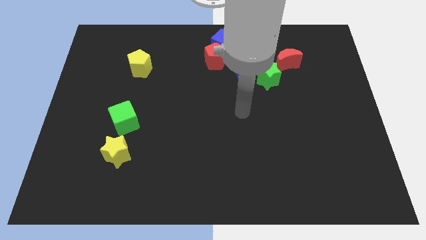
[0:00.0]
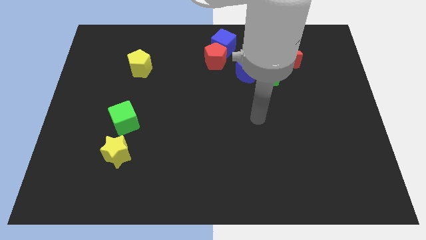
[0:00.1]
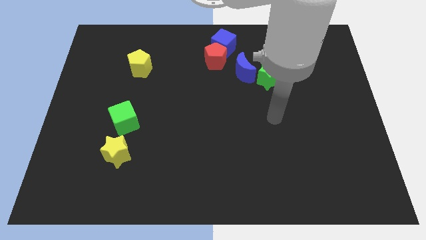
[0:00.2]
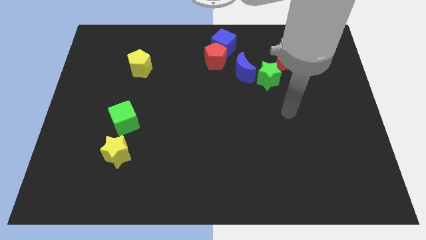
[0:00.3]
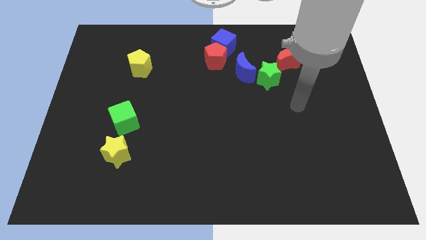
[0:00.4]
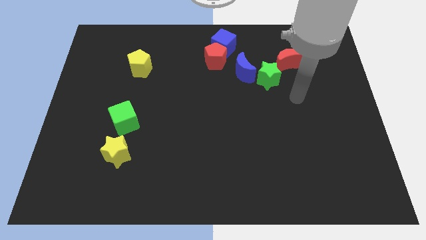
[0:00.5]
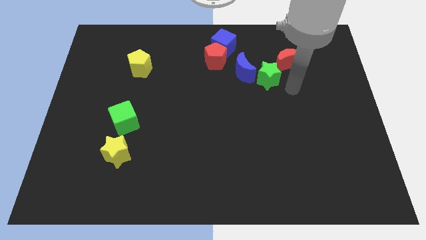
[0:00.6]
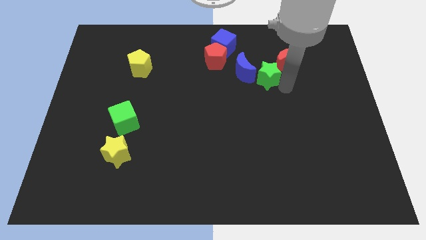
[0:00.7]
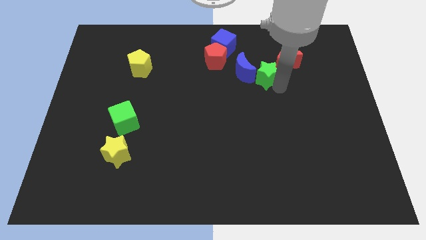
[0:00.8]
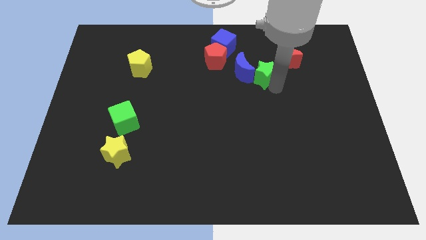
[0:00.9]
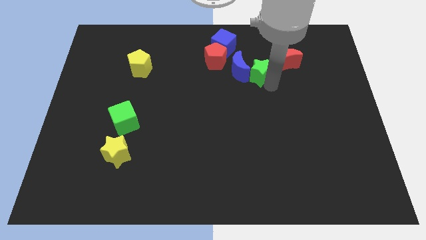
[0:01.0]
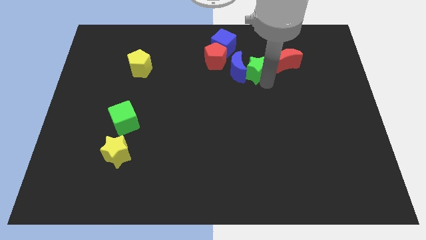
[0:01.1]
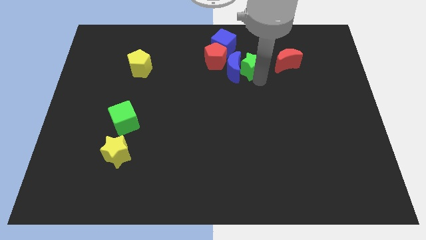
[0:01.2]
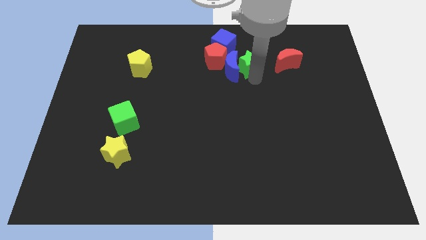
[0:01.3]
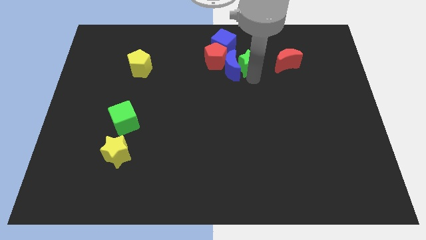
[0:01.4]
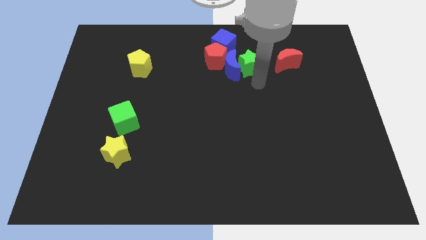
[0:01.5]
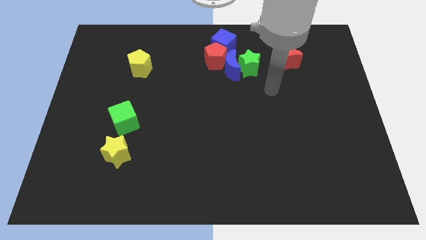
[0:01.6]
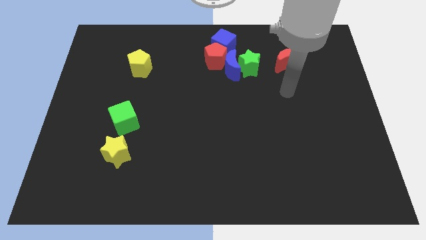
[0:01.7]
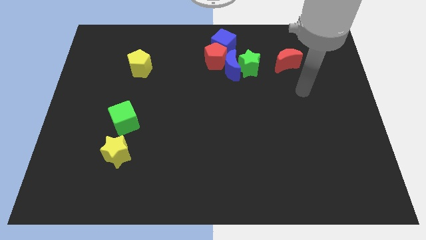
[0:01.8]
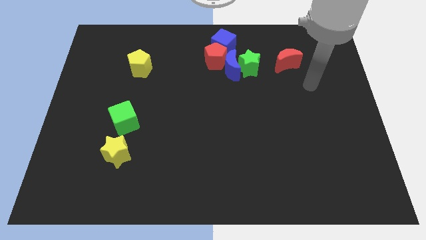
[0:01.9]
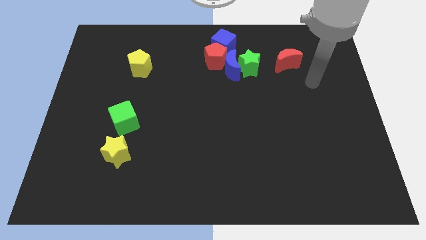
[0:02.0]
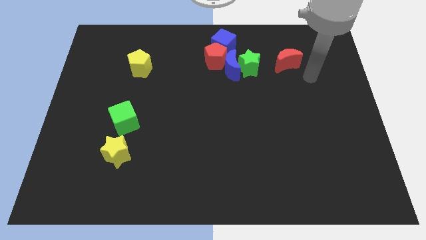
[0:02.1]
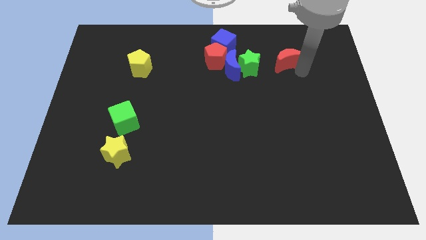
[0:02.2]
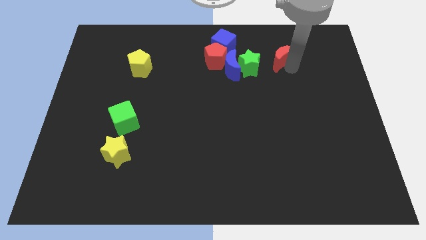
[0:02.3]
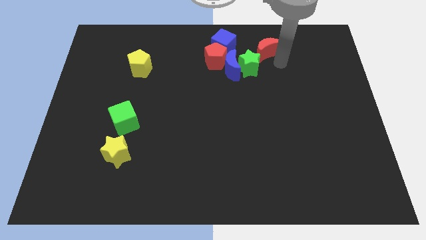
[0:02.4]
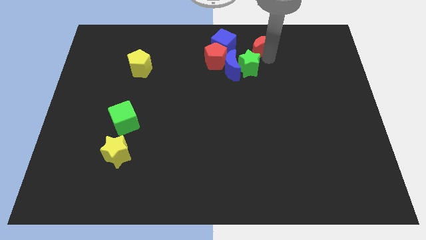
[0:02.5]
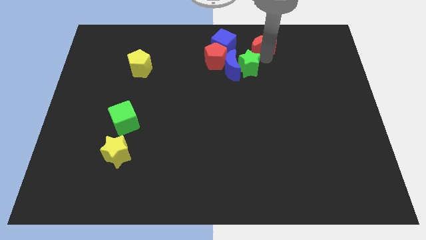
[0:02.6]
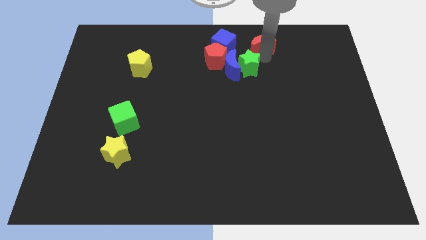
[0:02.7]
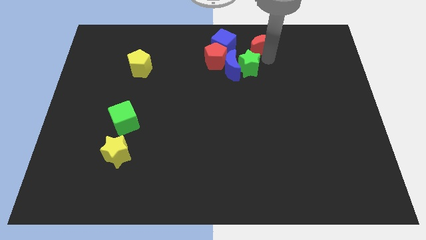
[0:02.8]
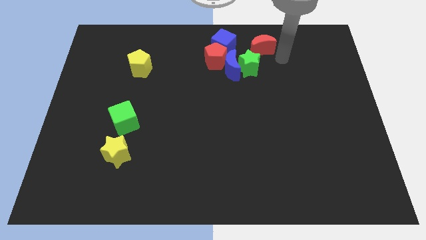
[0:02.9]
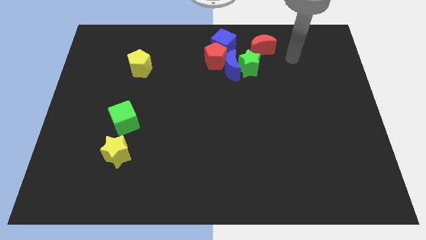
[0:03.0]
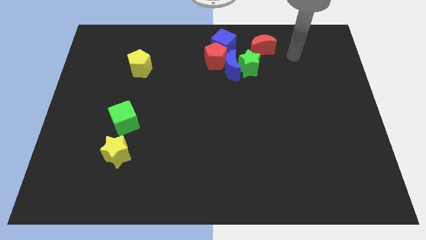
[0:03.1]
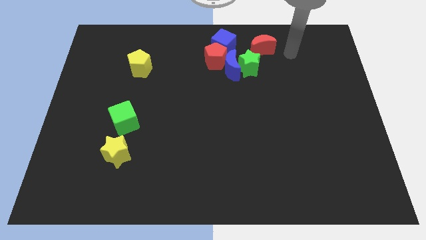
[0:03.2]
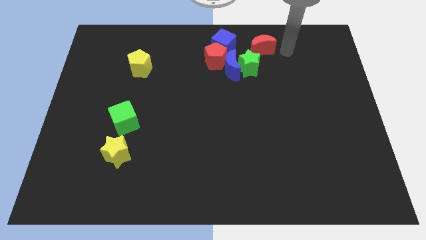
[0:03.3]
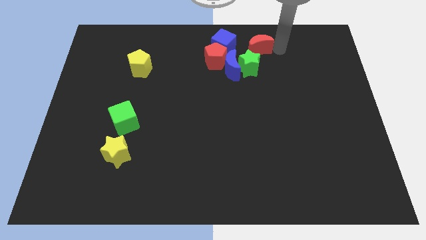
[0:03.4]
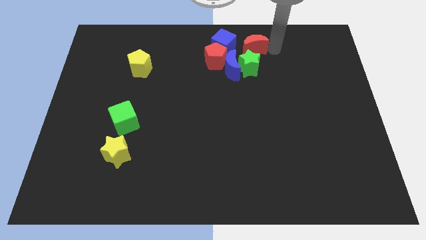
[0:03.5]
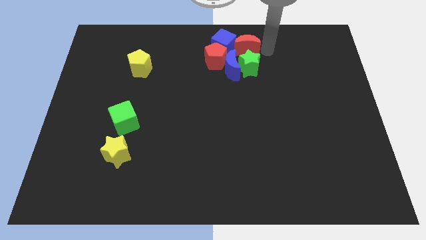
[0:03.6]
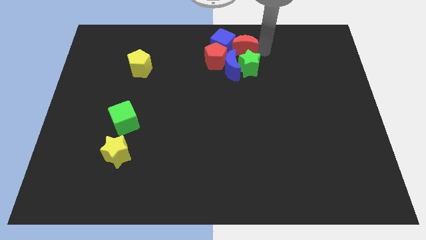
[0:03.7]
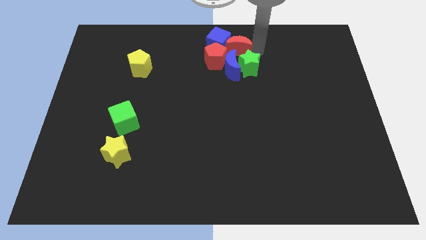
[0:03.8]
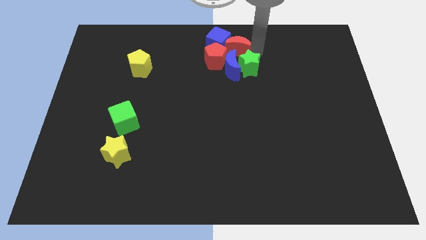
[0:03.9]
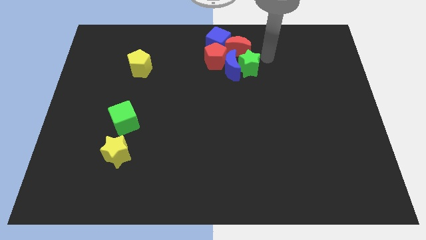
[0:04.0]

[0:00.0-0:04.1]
move the red moon right to the blue cube

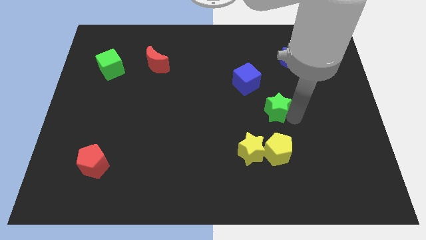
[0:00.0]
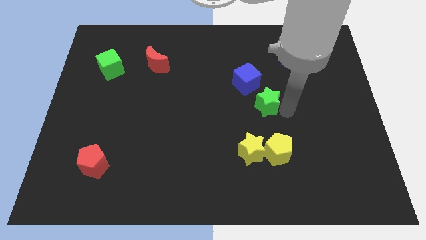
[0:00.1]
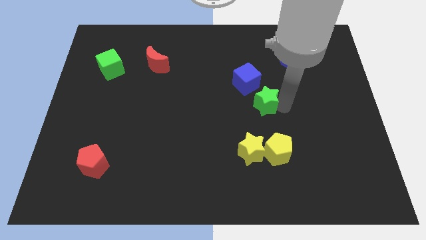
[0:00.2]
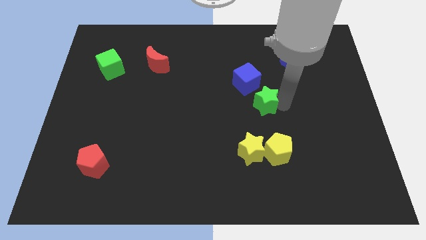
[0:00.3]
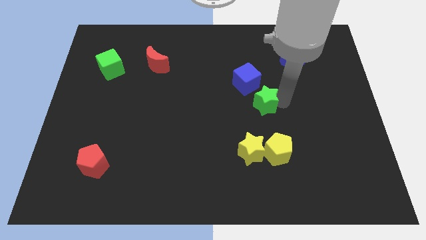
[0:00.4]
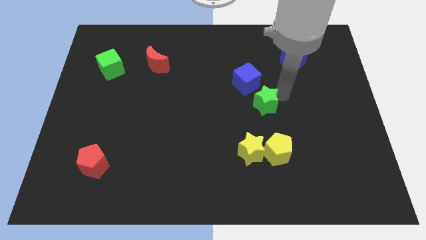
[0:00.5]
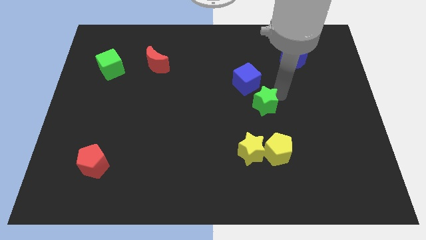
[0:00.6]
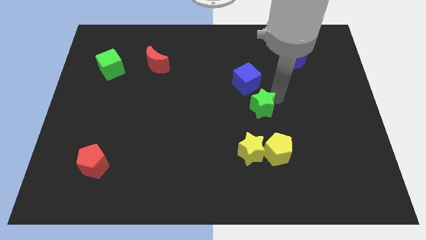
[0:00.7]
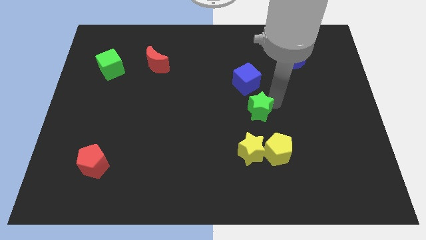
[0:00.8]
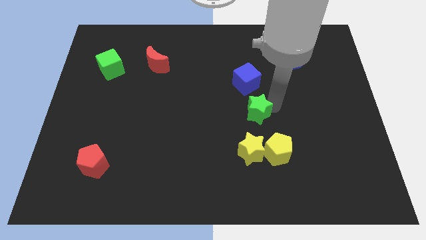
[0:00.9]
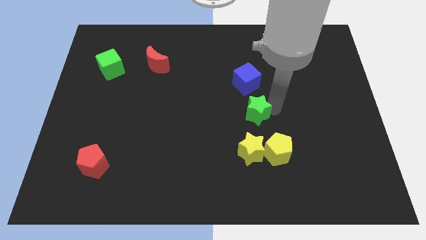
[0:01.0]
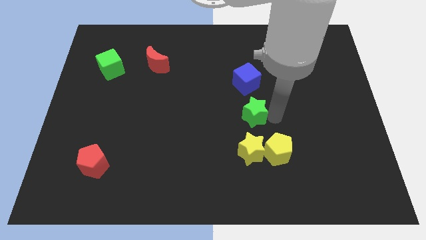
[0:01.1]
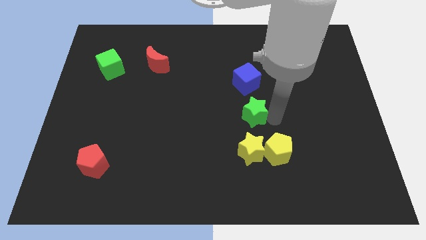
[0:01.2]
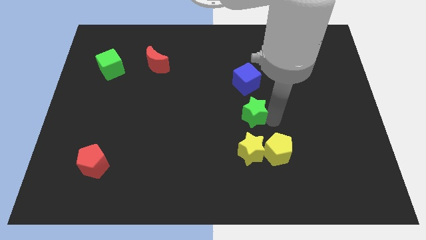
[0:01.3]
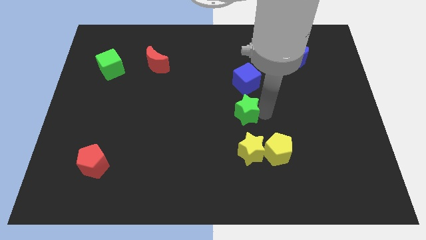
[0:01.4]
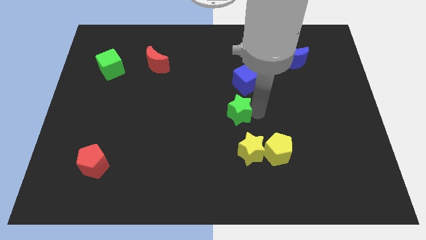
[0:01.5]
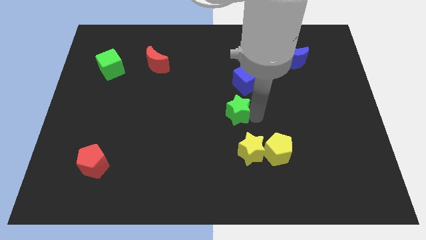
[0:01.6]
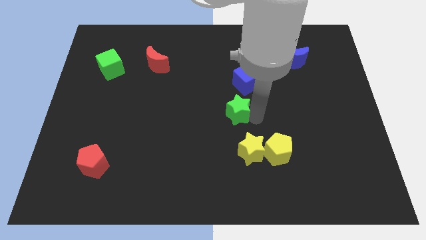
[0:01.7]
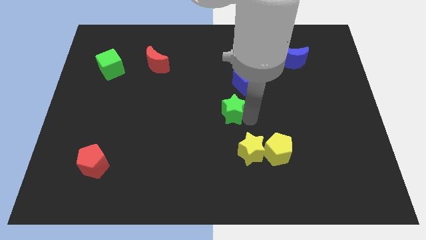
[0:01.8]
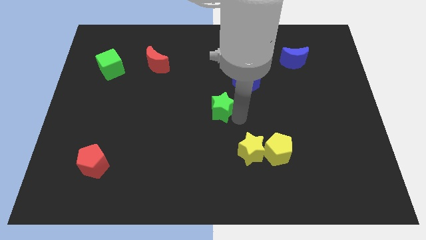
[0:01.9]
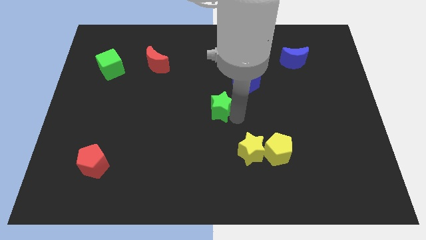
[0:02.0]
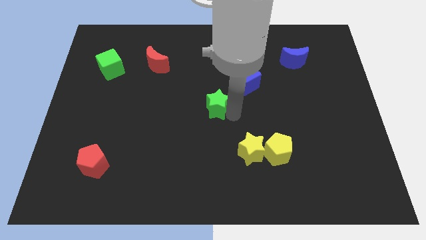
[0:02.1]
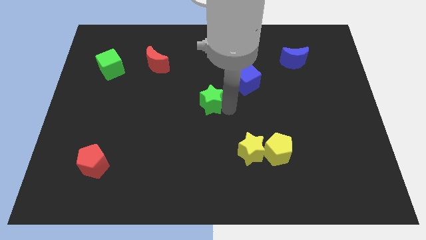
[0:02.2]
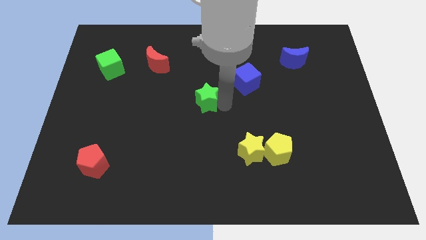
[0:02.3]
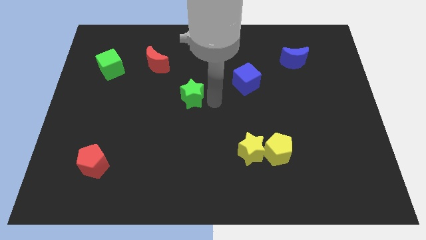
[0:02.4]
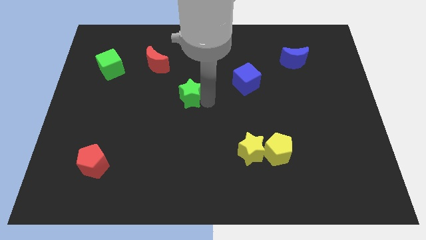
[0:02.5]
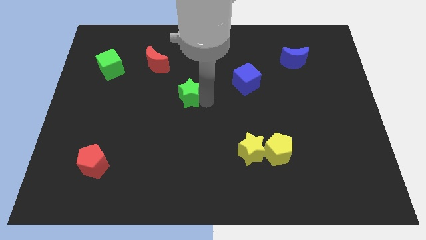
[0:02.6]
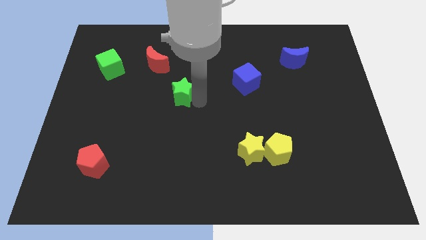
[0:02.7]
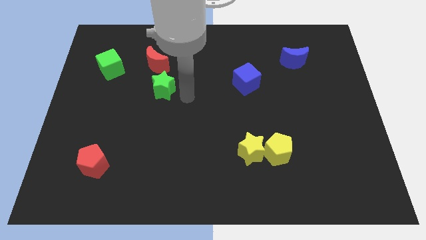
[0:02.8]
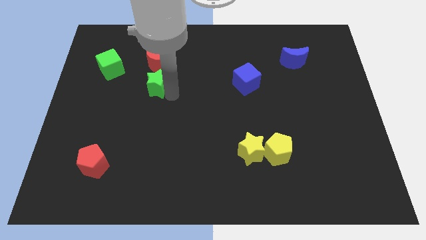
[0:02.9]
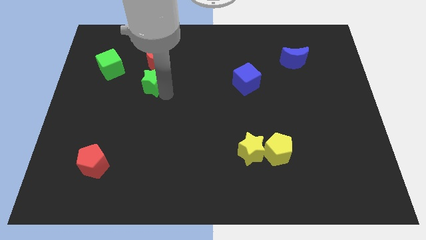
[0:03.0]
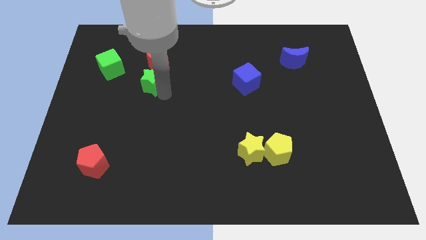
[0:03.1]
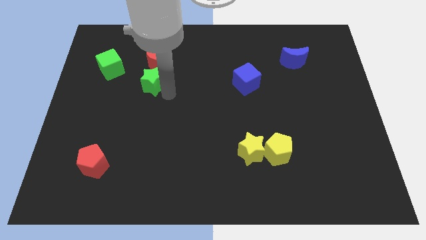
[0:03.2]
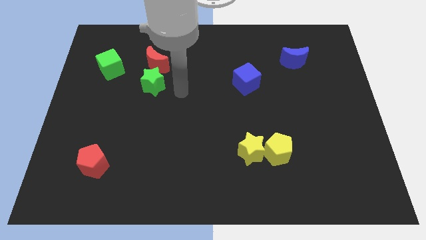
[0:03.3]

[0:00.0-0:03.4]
slide the green star below the red crescent

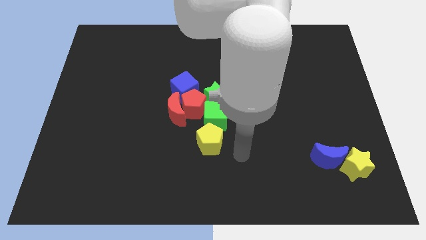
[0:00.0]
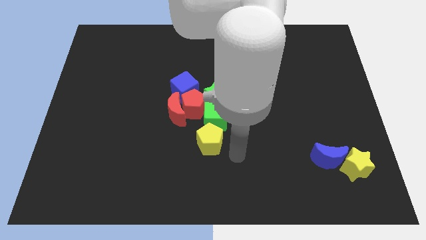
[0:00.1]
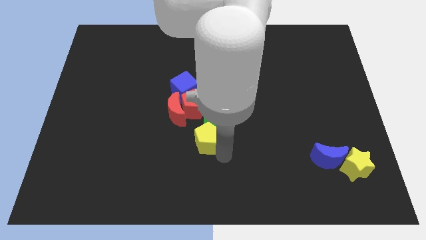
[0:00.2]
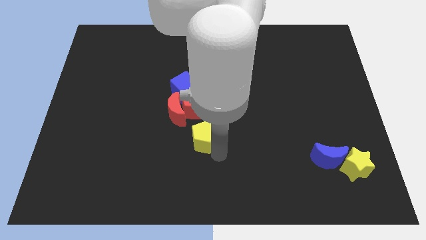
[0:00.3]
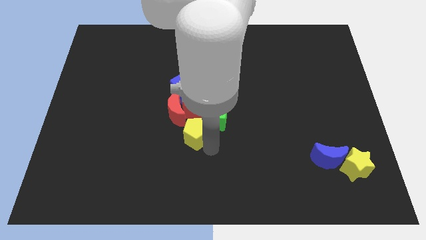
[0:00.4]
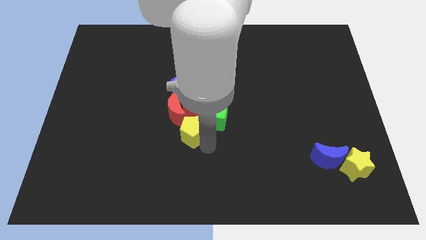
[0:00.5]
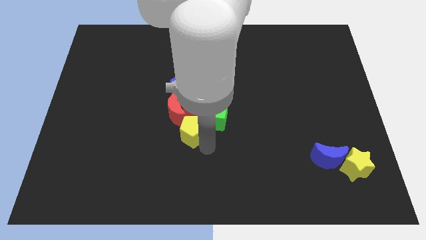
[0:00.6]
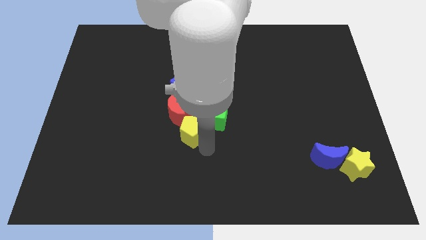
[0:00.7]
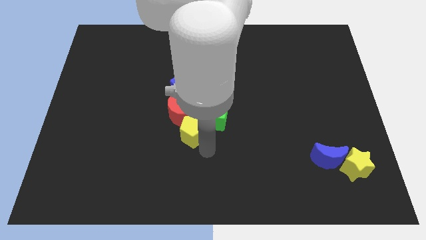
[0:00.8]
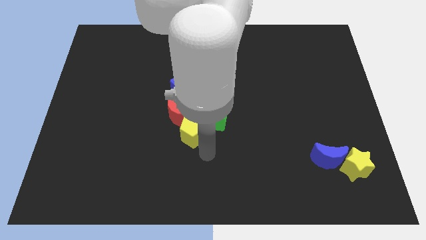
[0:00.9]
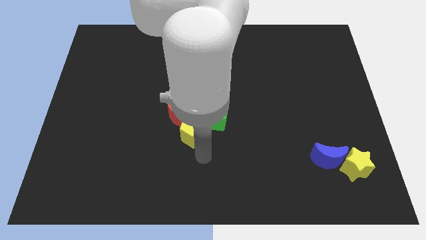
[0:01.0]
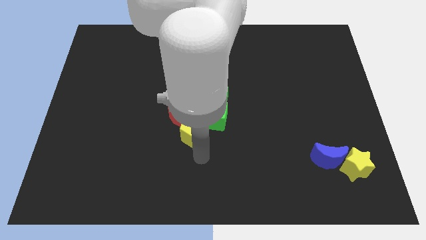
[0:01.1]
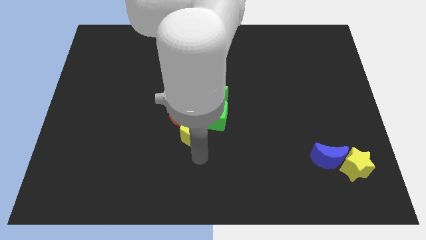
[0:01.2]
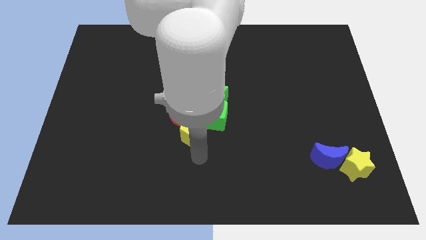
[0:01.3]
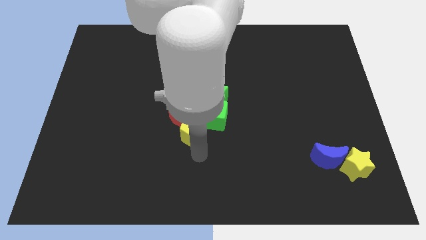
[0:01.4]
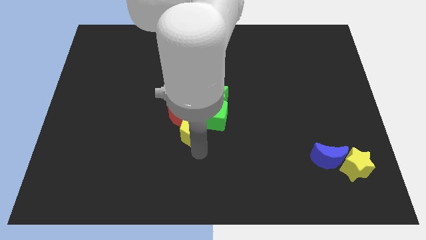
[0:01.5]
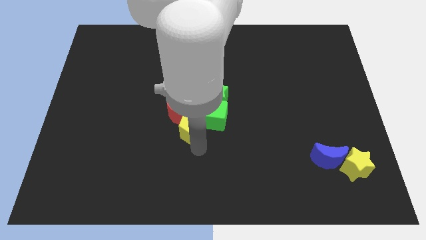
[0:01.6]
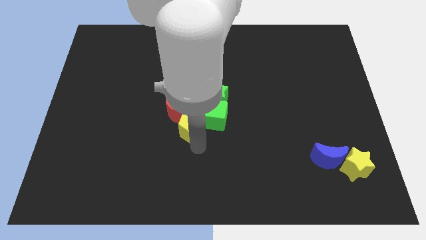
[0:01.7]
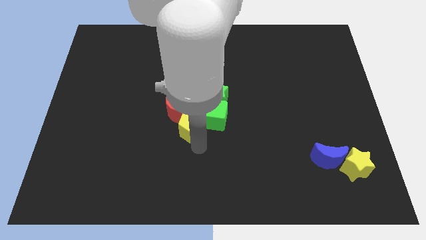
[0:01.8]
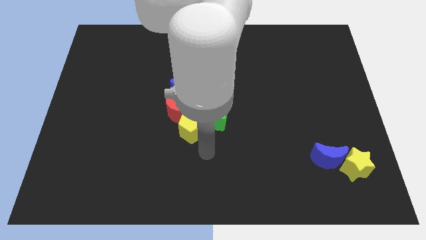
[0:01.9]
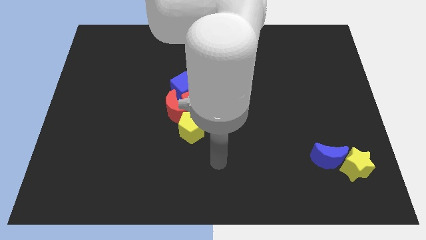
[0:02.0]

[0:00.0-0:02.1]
push the yellow pentagon below the red pentagon
